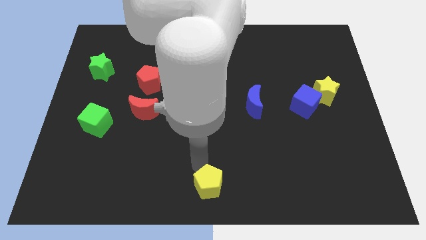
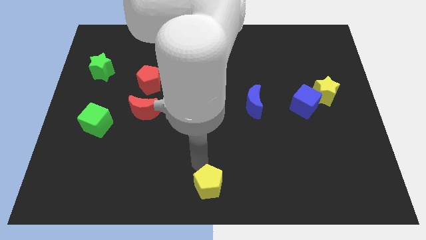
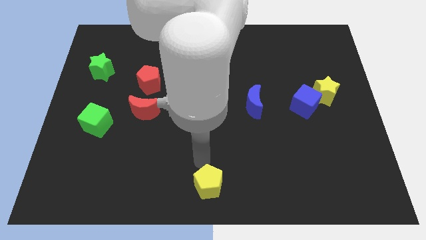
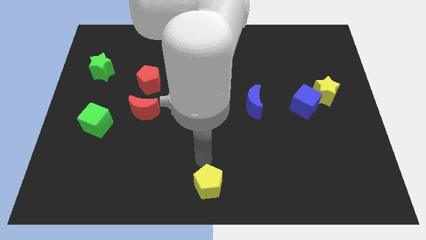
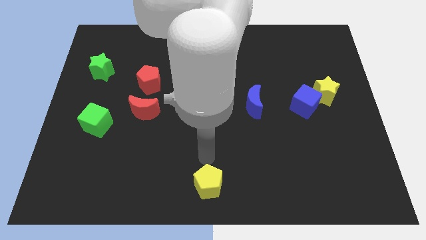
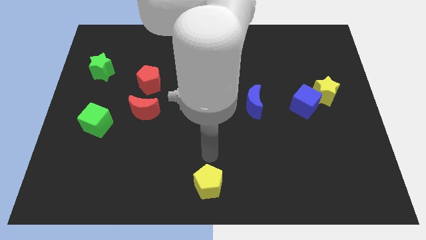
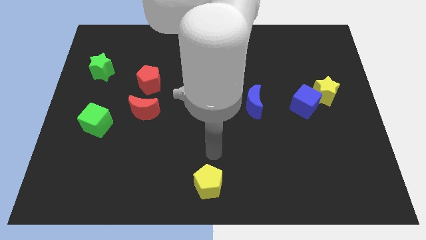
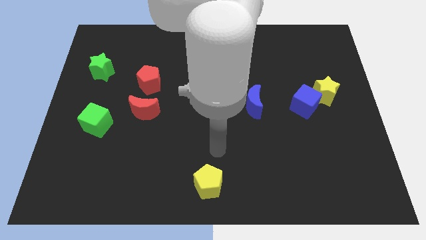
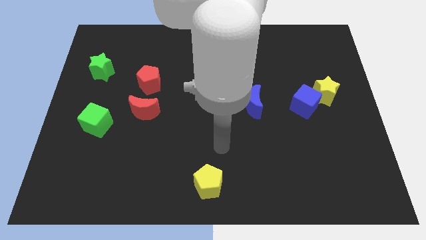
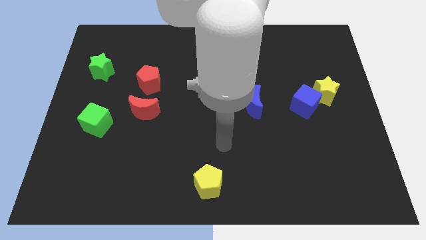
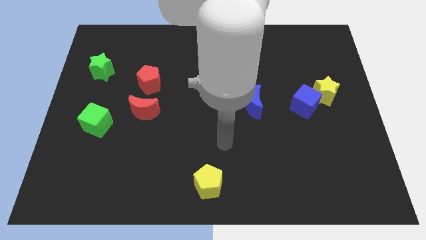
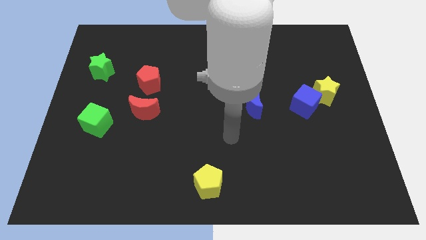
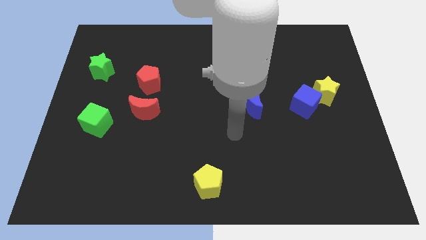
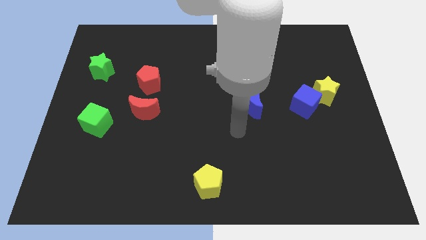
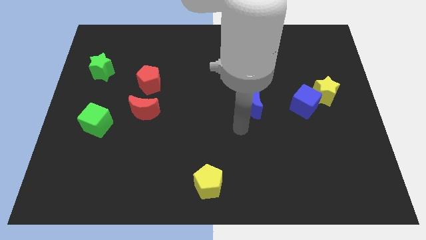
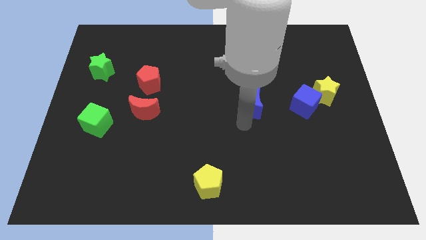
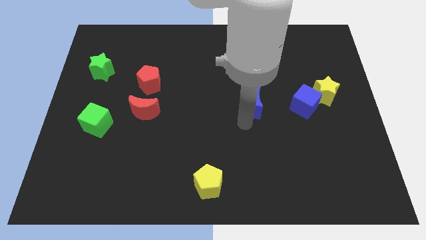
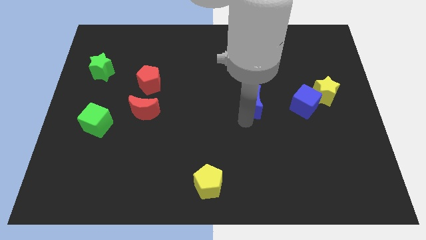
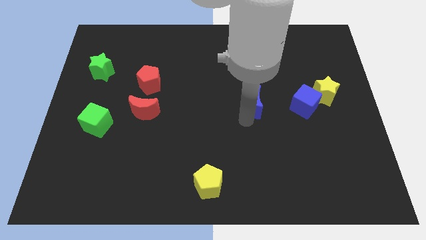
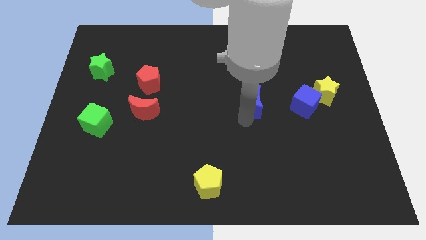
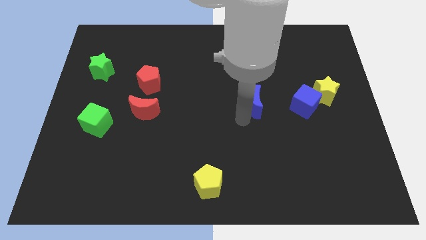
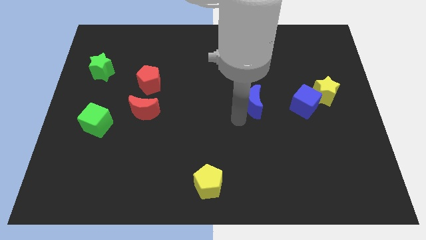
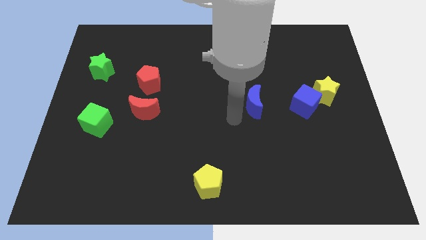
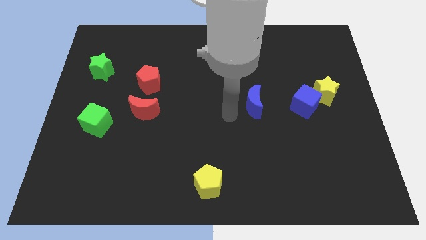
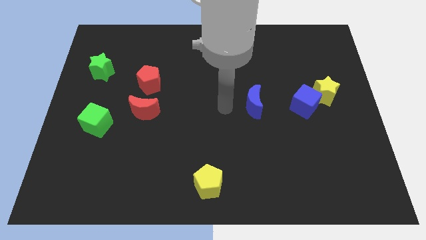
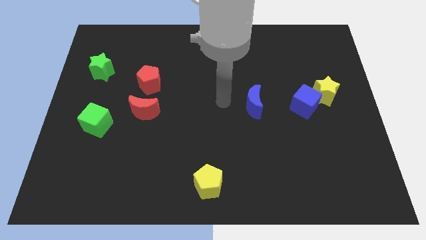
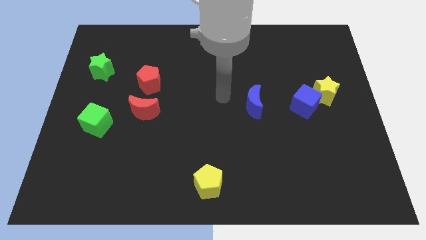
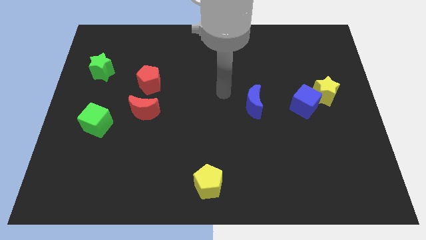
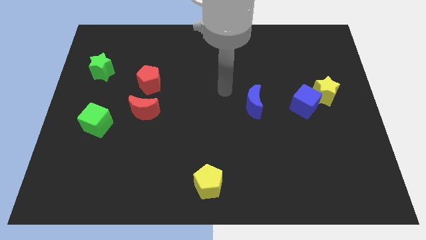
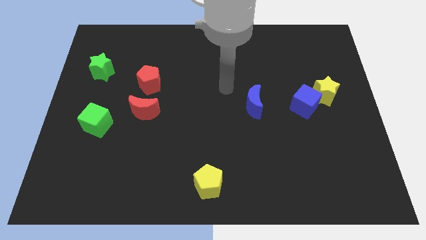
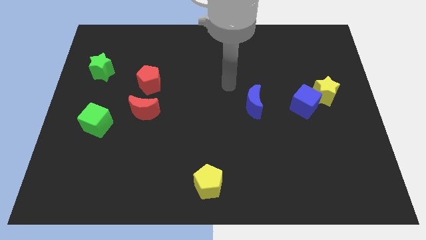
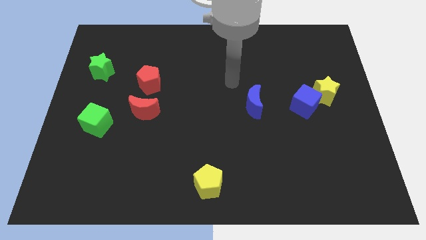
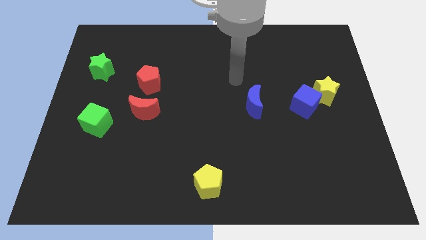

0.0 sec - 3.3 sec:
move your arm away from yellow pentagon

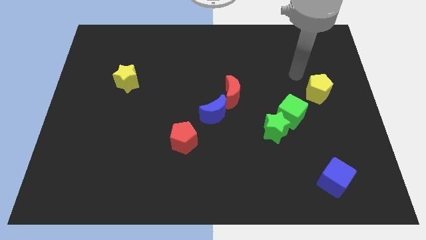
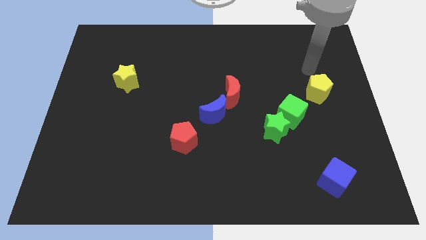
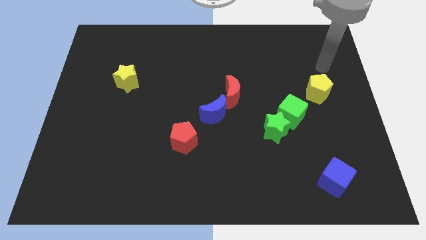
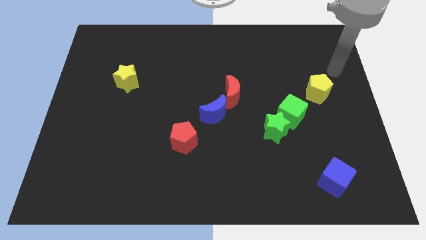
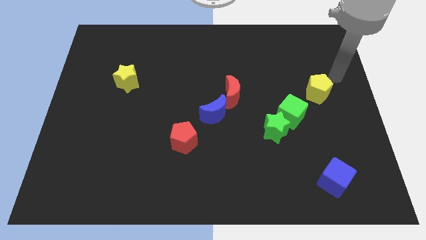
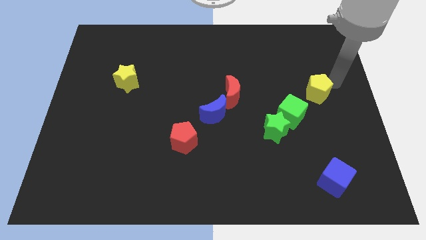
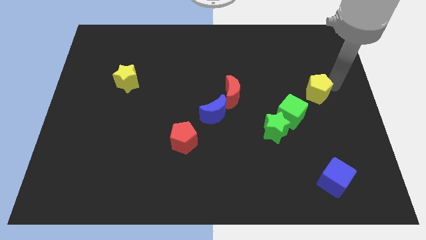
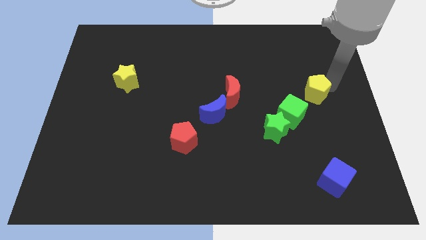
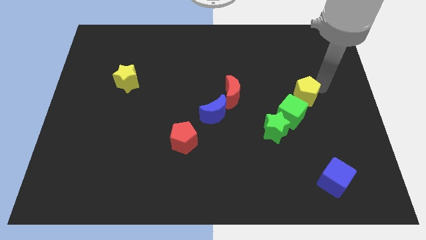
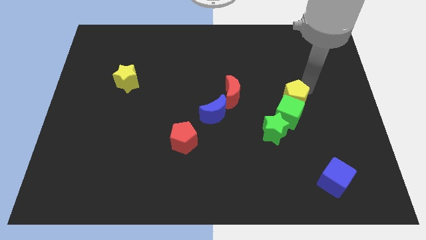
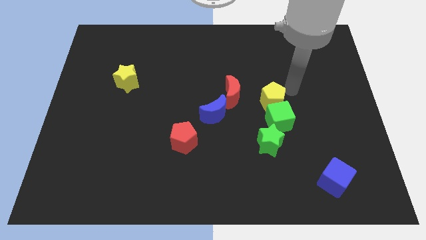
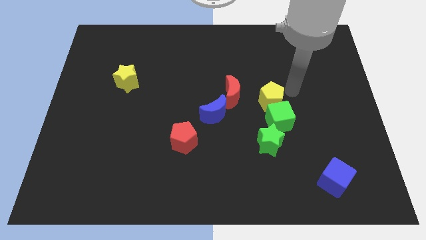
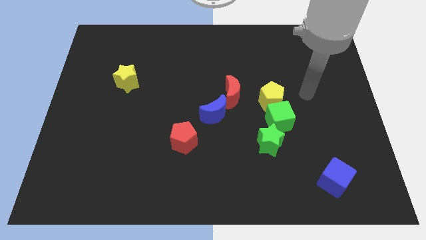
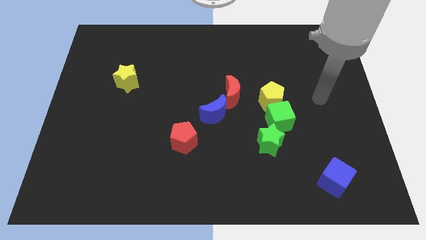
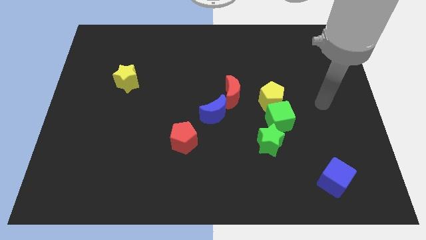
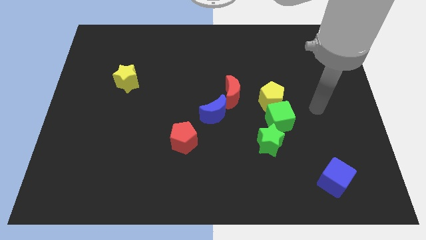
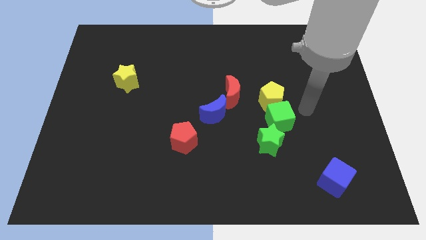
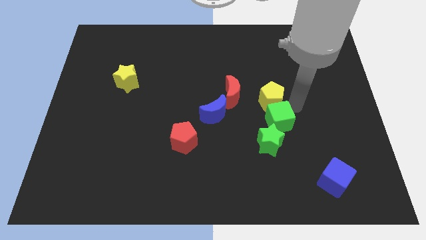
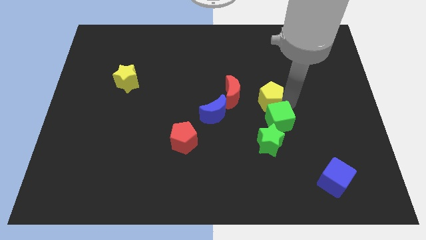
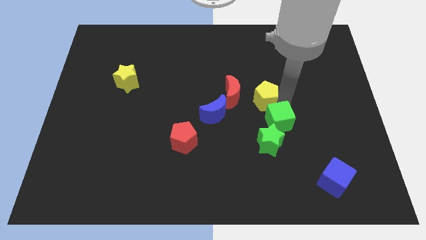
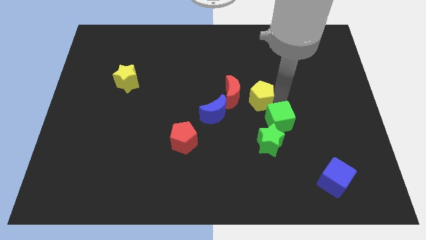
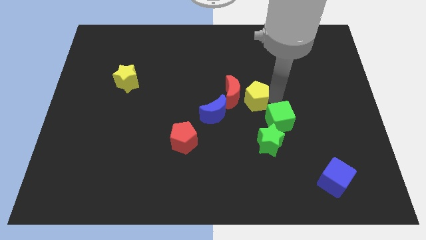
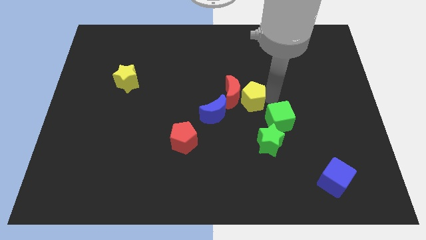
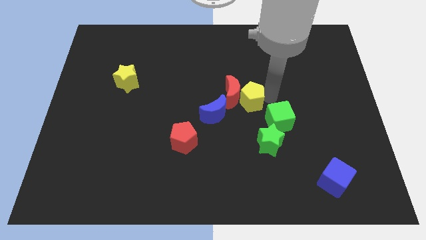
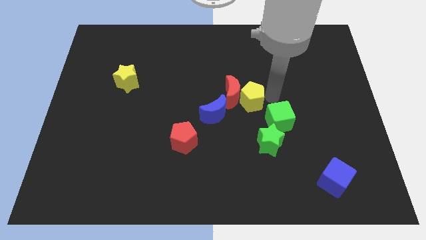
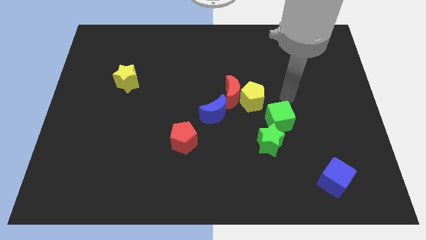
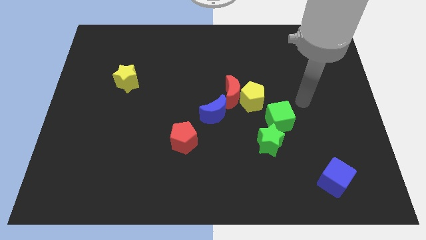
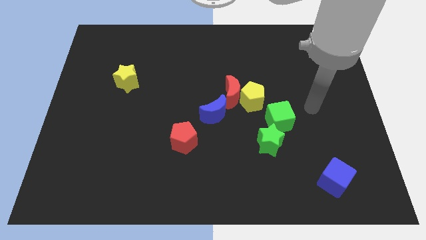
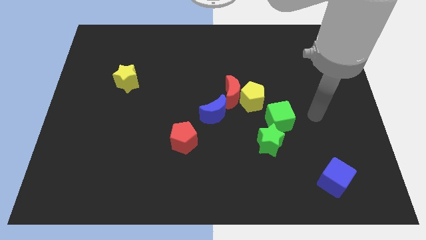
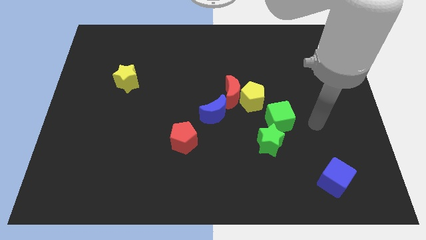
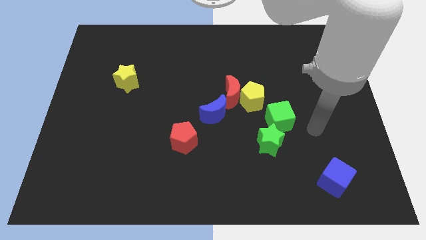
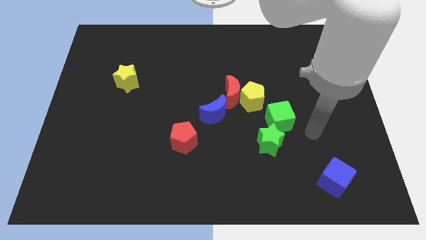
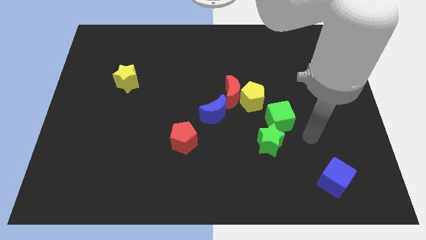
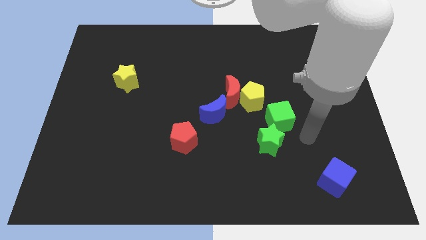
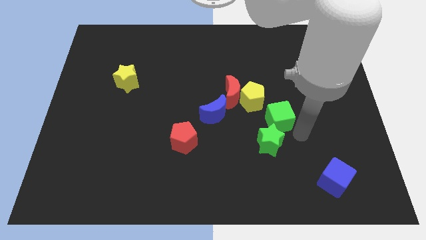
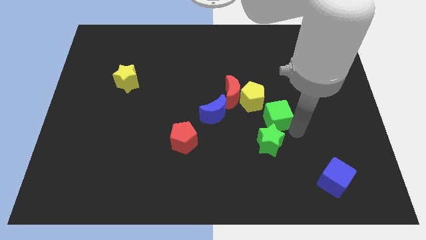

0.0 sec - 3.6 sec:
push the yellow pentagon to the right of the red crescent

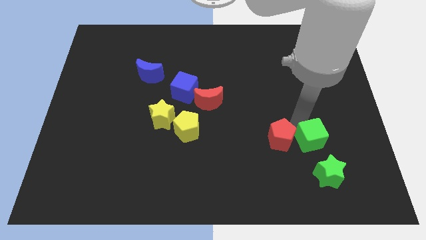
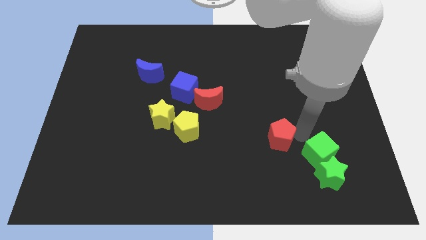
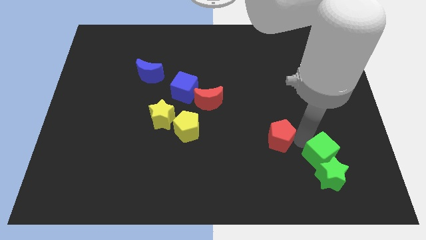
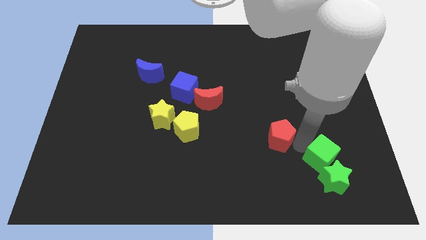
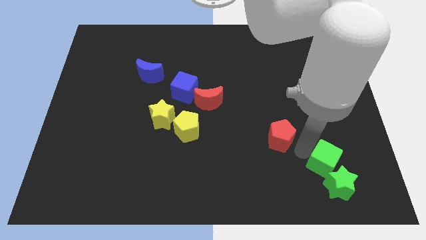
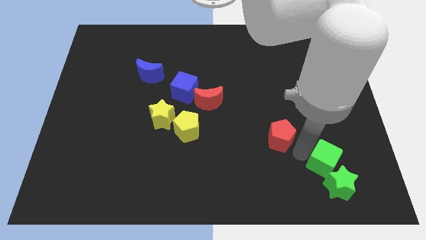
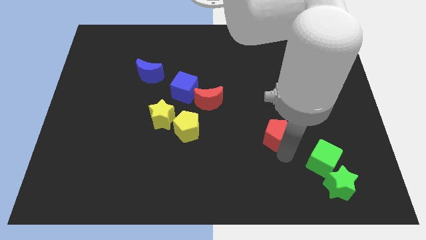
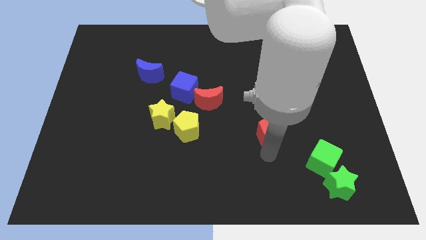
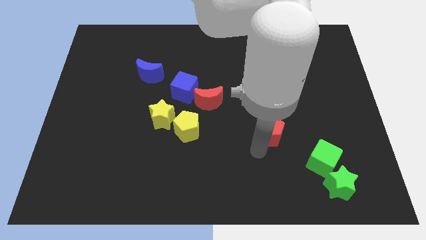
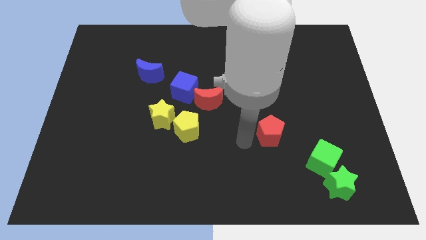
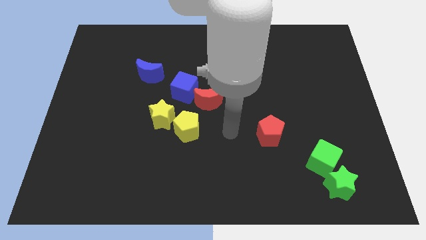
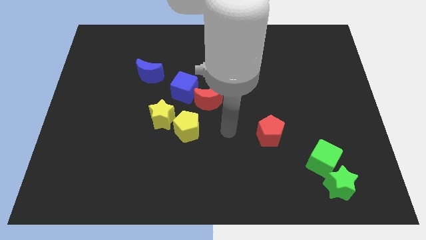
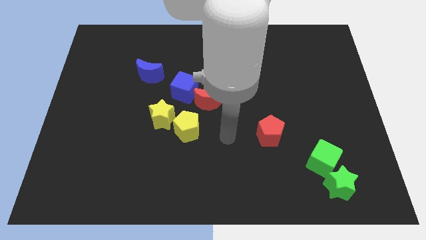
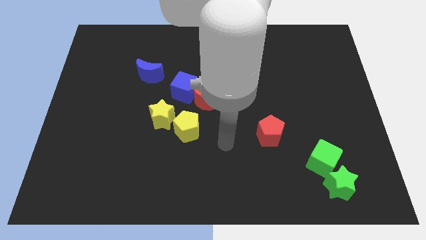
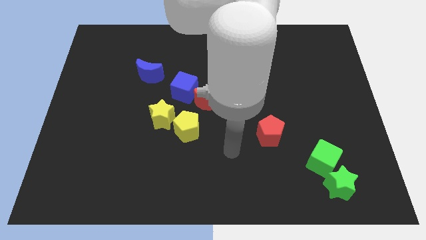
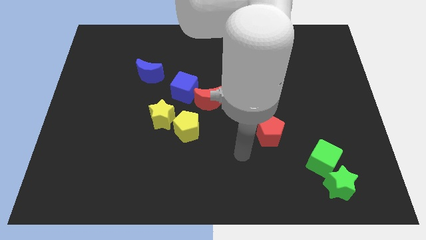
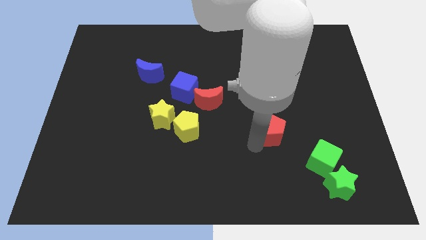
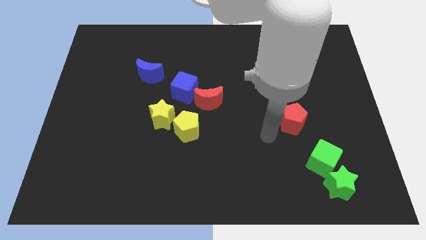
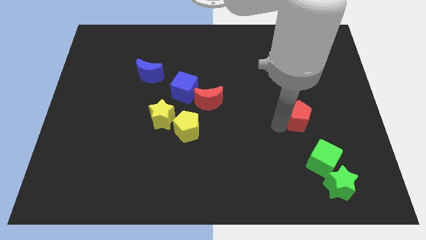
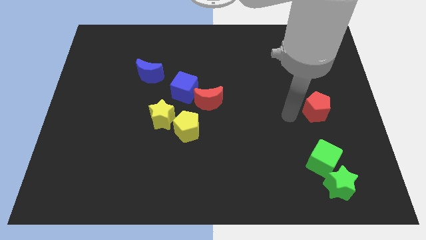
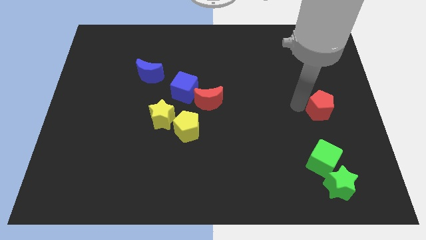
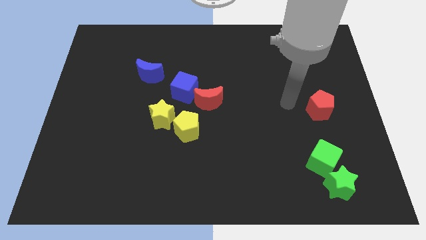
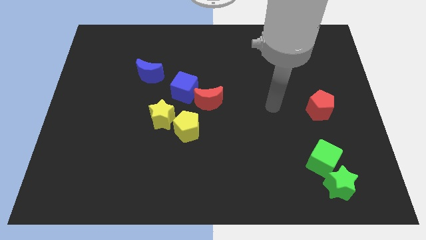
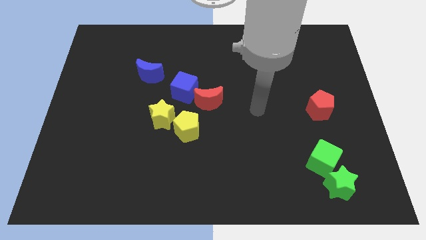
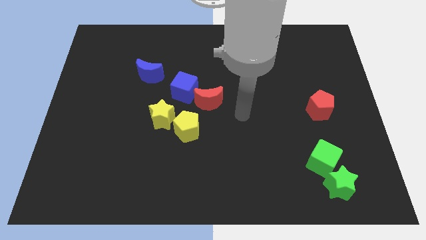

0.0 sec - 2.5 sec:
move the red pentagon towards the right center of the board
